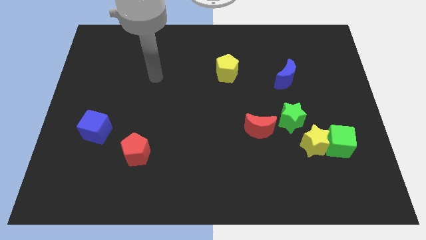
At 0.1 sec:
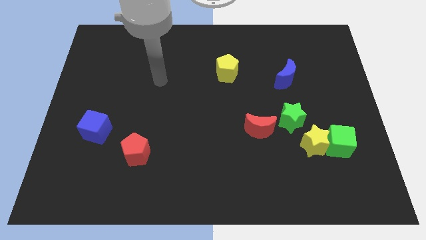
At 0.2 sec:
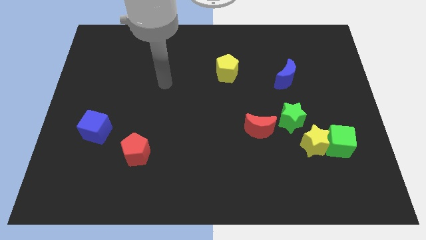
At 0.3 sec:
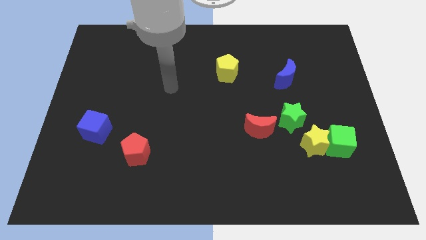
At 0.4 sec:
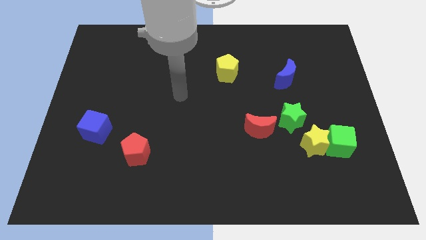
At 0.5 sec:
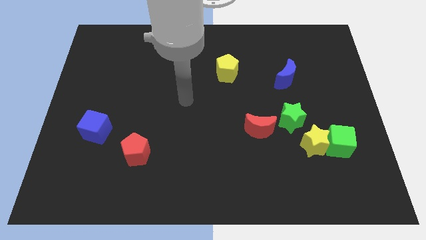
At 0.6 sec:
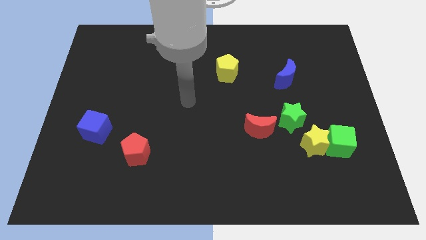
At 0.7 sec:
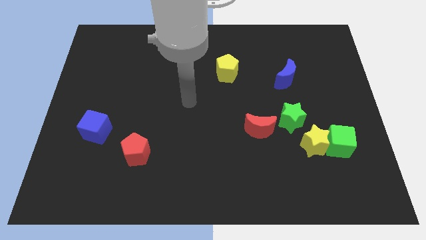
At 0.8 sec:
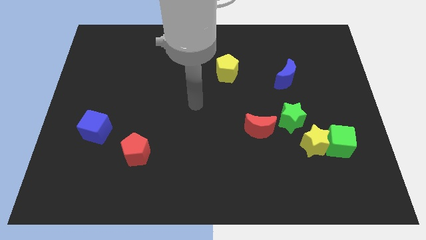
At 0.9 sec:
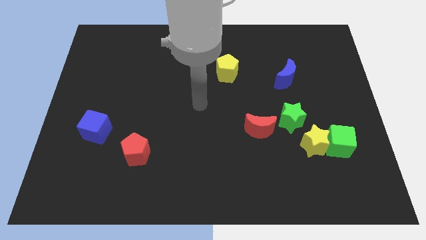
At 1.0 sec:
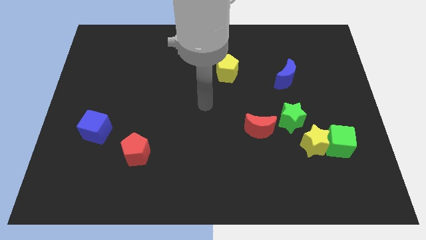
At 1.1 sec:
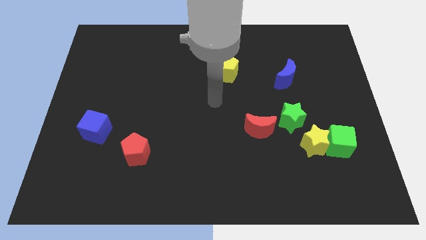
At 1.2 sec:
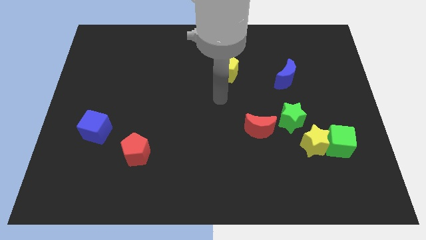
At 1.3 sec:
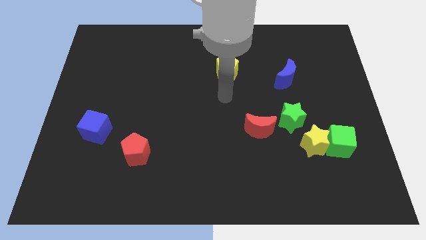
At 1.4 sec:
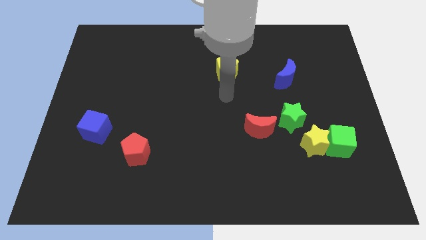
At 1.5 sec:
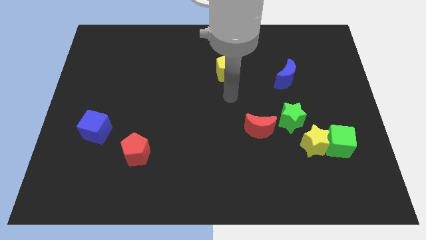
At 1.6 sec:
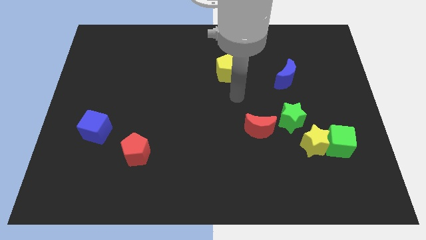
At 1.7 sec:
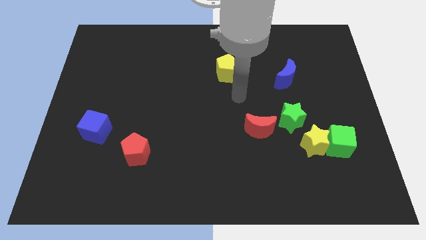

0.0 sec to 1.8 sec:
place your arm between the red and yellow block

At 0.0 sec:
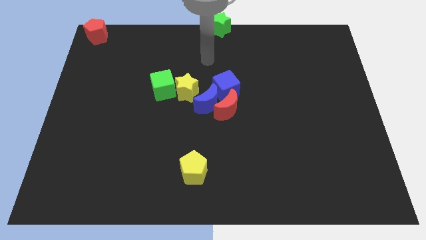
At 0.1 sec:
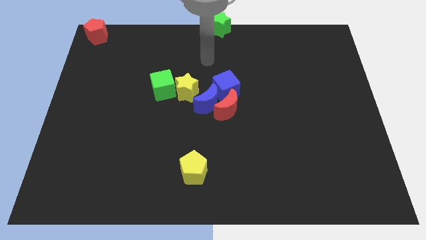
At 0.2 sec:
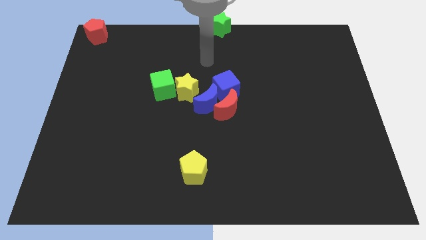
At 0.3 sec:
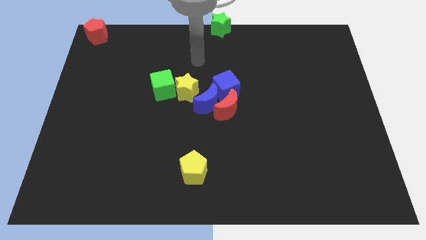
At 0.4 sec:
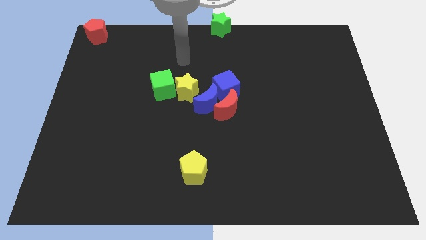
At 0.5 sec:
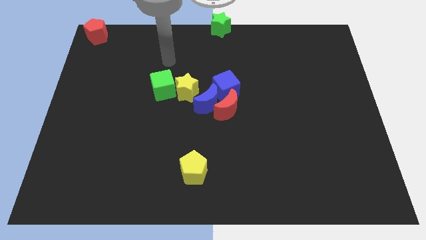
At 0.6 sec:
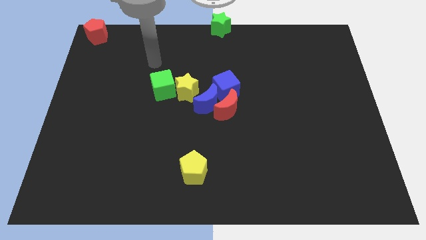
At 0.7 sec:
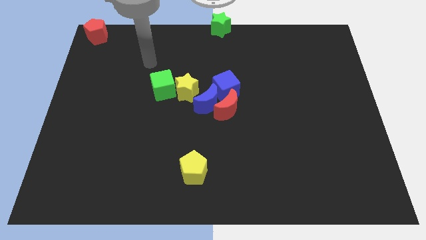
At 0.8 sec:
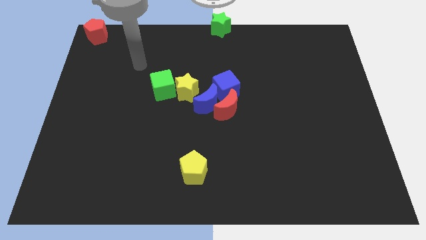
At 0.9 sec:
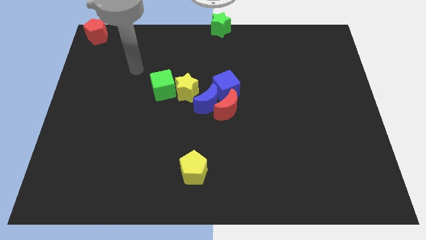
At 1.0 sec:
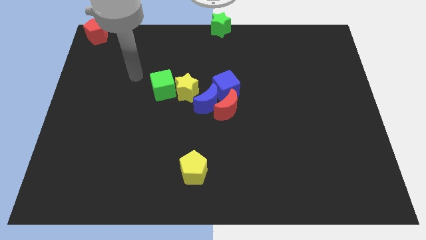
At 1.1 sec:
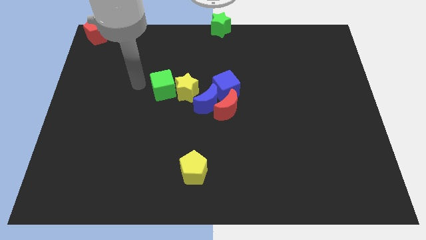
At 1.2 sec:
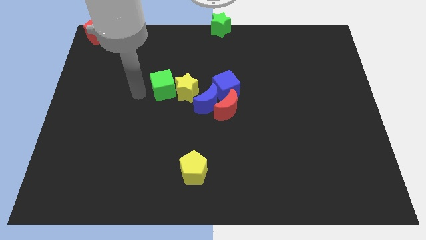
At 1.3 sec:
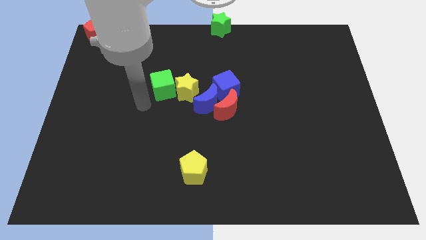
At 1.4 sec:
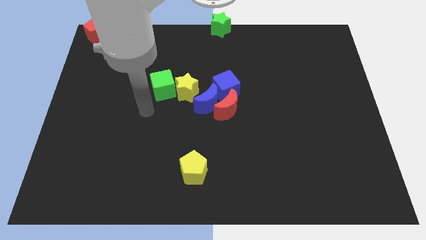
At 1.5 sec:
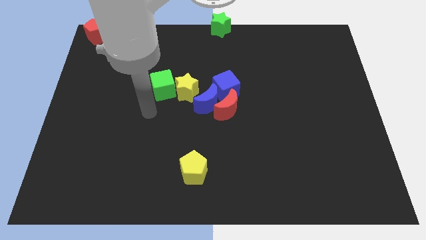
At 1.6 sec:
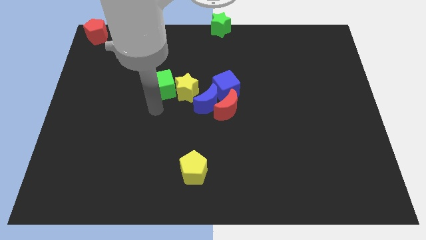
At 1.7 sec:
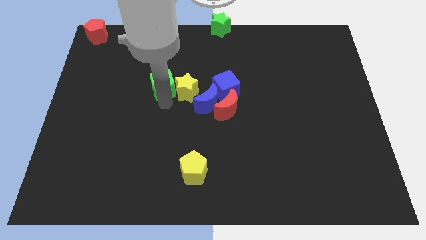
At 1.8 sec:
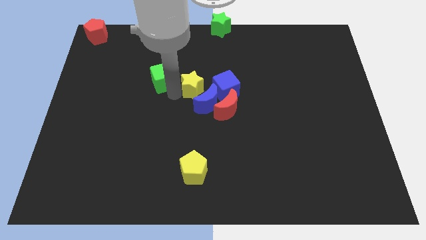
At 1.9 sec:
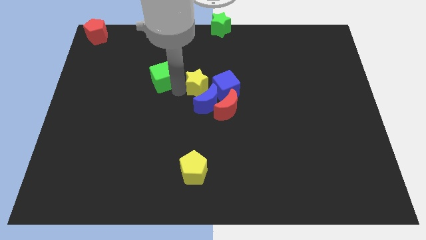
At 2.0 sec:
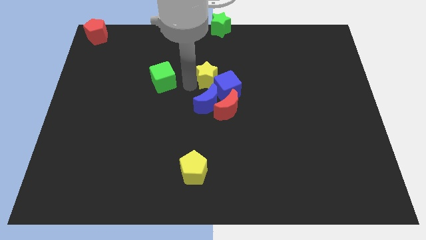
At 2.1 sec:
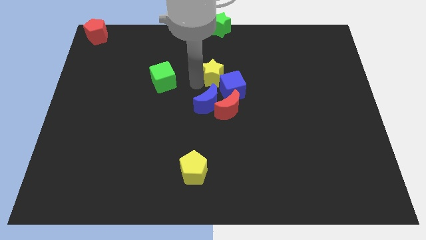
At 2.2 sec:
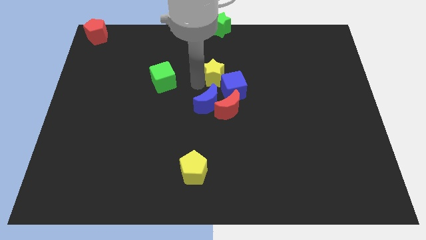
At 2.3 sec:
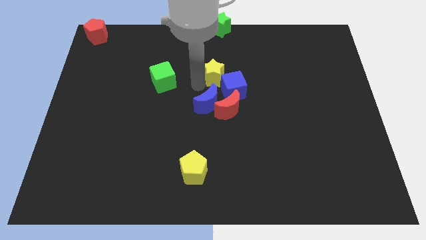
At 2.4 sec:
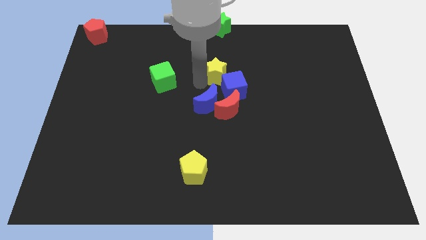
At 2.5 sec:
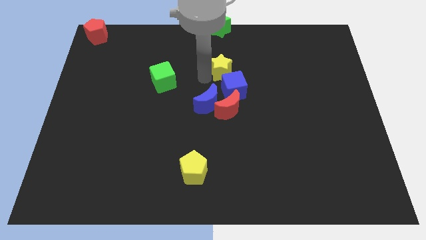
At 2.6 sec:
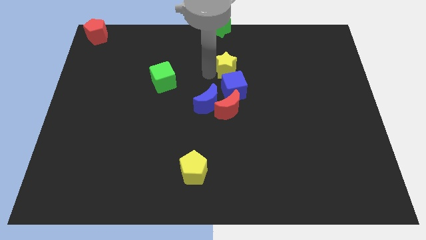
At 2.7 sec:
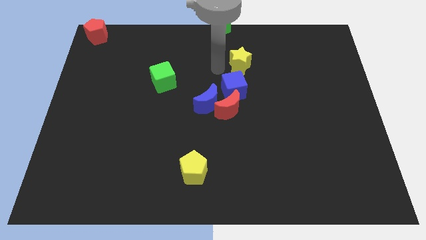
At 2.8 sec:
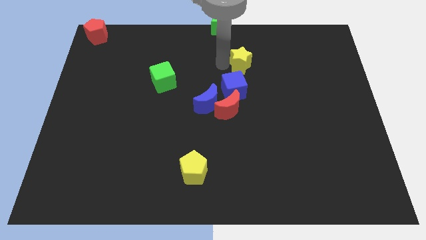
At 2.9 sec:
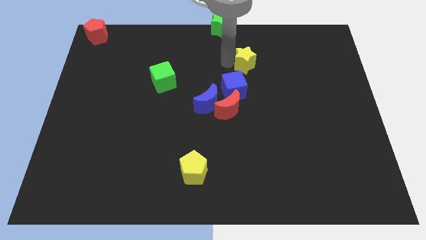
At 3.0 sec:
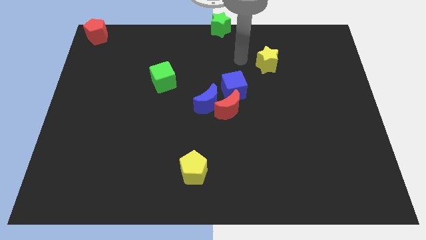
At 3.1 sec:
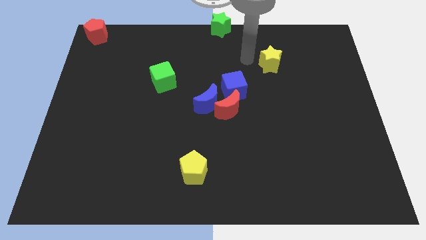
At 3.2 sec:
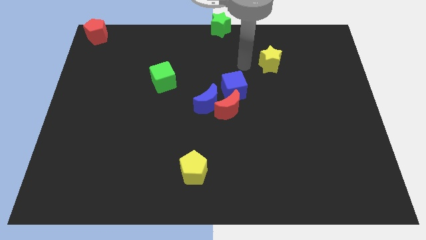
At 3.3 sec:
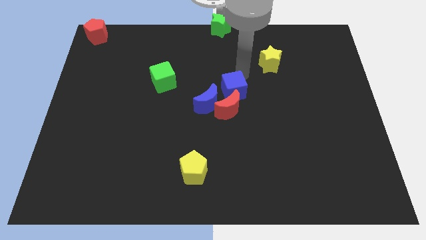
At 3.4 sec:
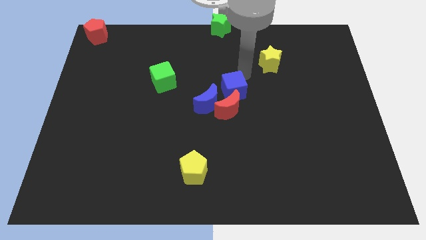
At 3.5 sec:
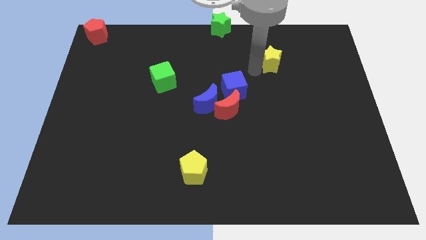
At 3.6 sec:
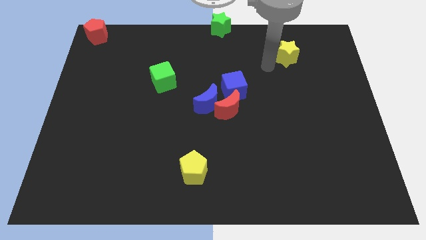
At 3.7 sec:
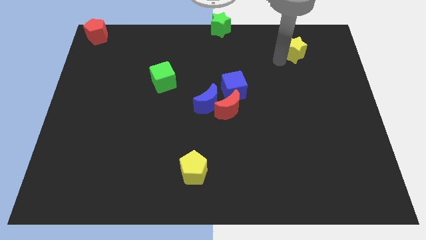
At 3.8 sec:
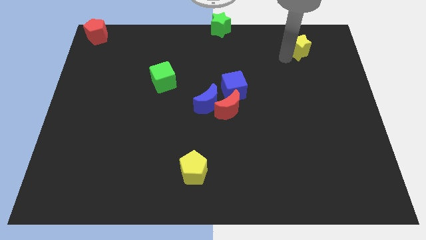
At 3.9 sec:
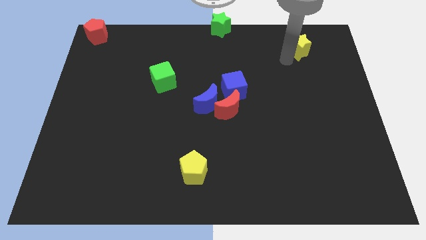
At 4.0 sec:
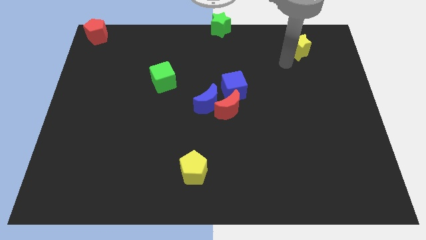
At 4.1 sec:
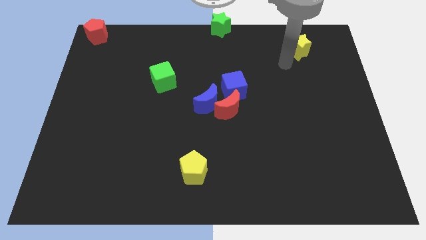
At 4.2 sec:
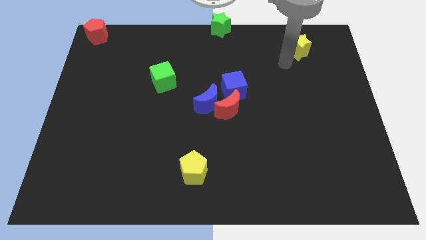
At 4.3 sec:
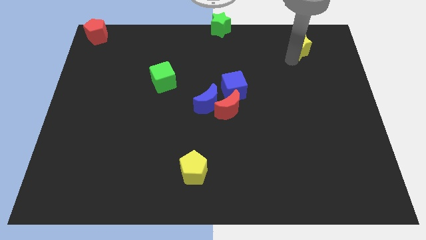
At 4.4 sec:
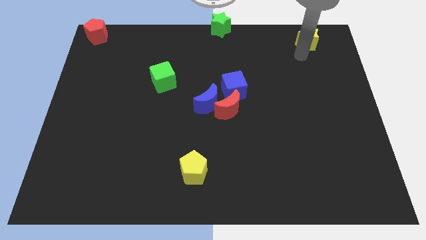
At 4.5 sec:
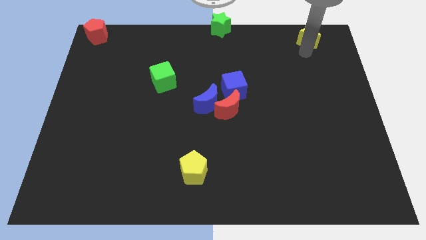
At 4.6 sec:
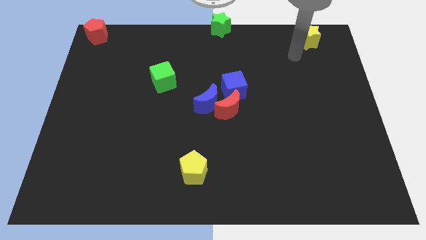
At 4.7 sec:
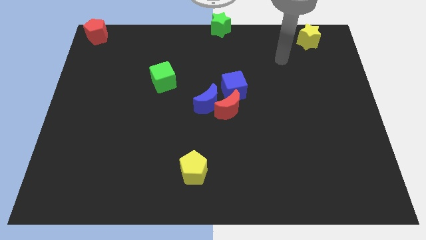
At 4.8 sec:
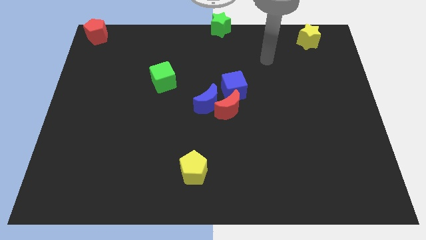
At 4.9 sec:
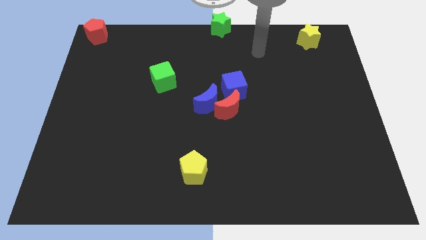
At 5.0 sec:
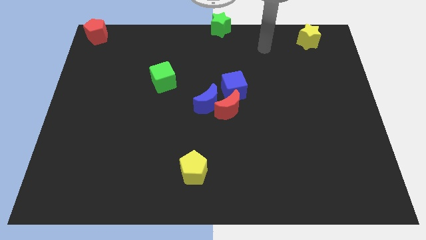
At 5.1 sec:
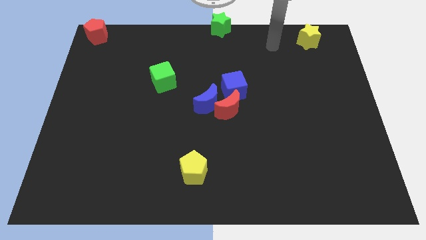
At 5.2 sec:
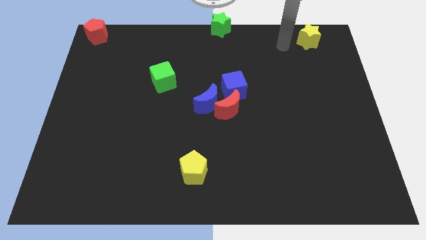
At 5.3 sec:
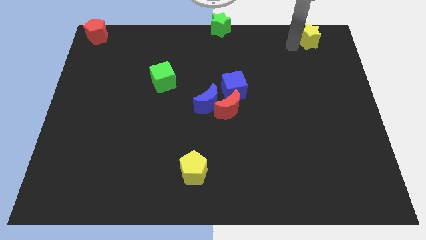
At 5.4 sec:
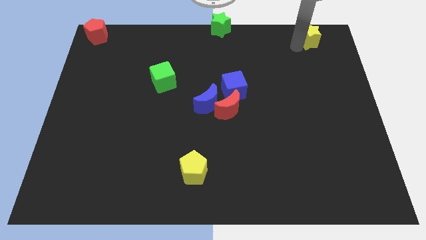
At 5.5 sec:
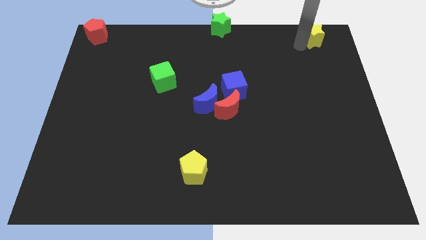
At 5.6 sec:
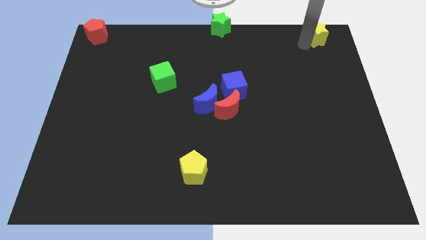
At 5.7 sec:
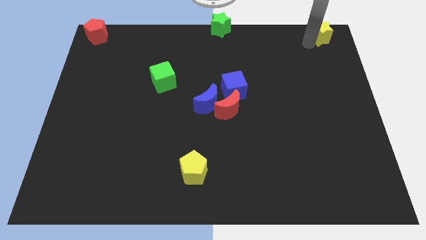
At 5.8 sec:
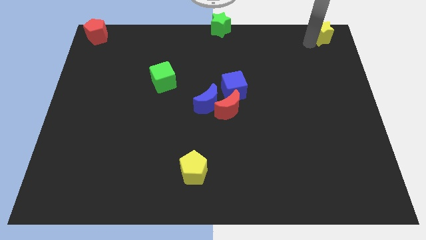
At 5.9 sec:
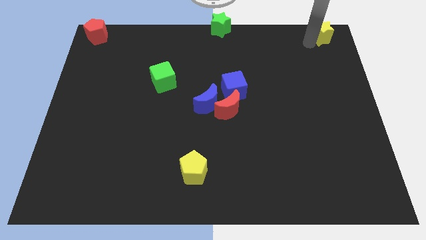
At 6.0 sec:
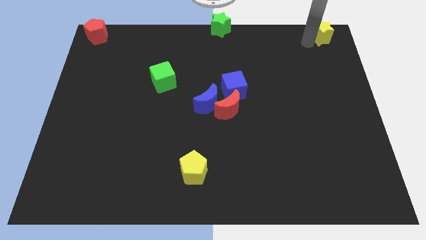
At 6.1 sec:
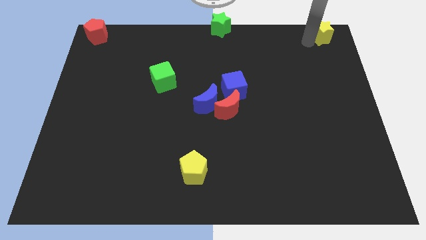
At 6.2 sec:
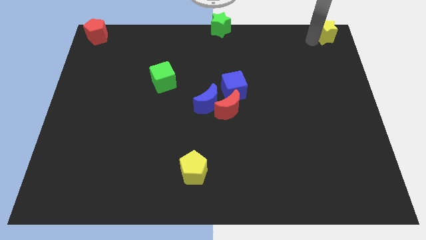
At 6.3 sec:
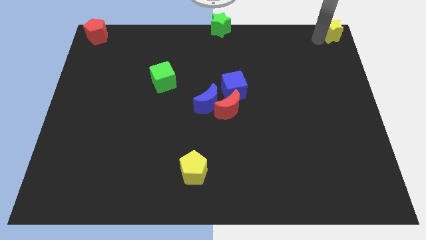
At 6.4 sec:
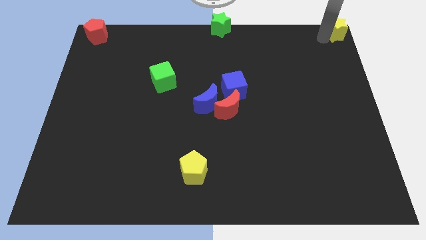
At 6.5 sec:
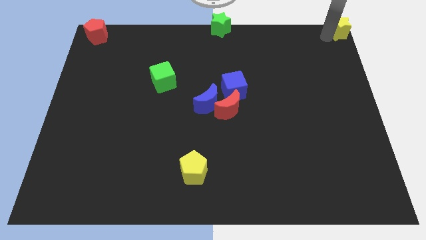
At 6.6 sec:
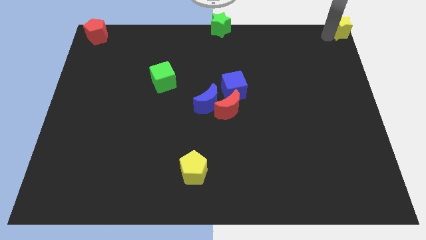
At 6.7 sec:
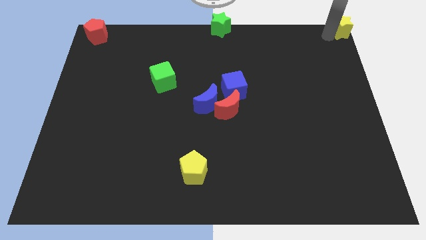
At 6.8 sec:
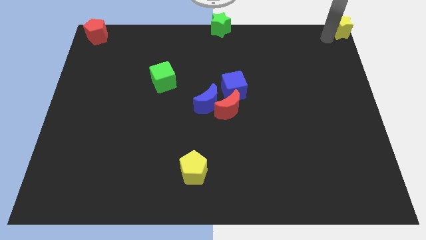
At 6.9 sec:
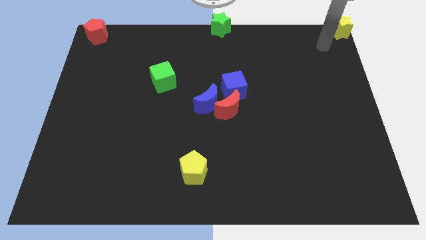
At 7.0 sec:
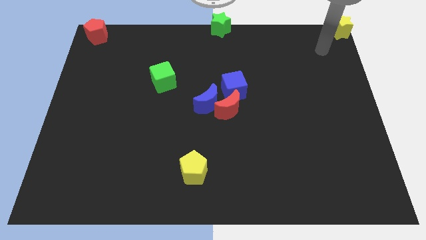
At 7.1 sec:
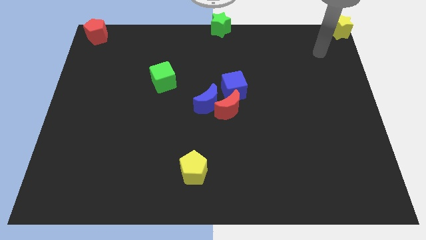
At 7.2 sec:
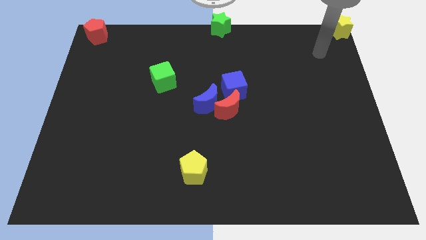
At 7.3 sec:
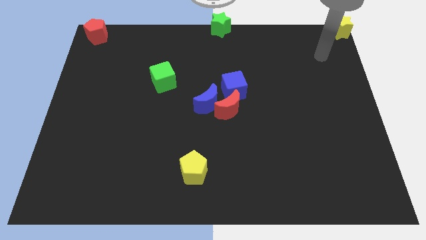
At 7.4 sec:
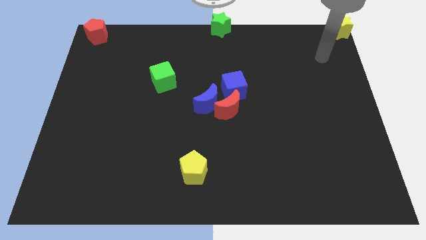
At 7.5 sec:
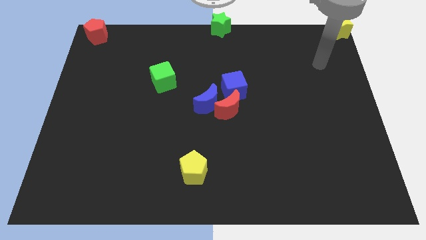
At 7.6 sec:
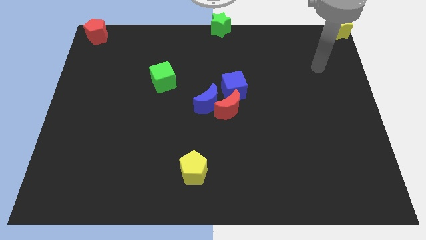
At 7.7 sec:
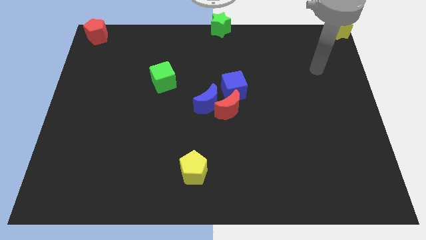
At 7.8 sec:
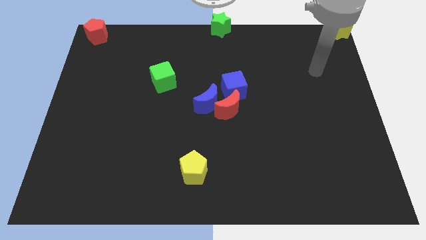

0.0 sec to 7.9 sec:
move the yellow star to the top right corner of the board
